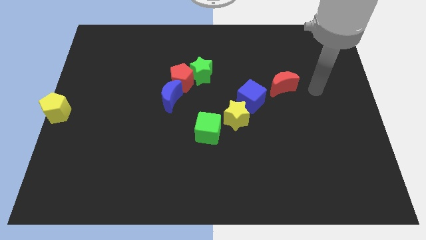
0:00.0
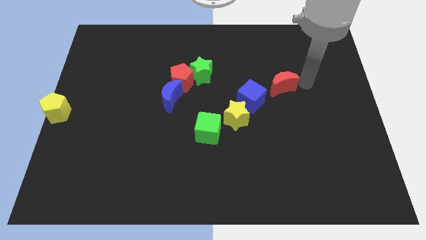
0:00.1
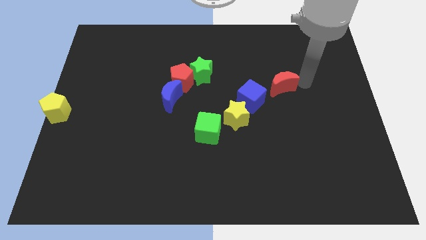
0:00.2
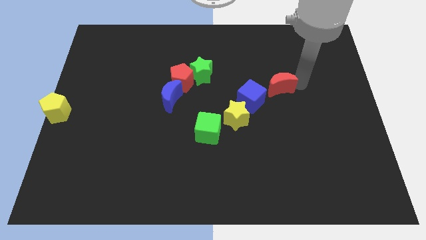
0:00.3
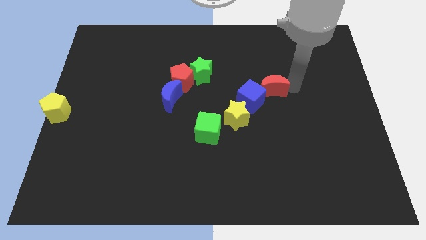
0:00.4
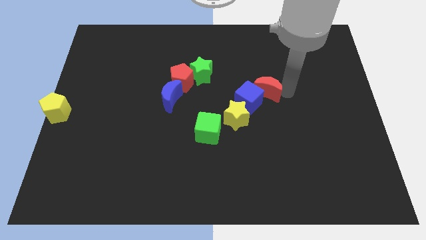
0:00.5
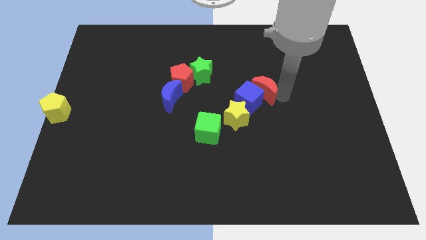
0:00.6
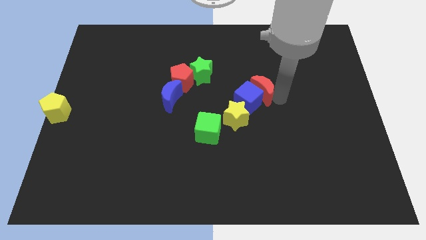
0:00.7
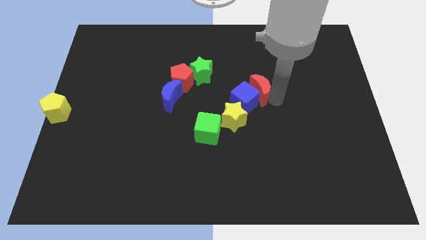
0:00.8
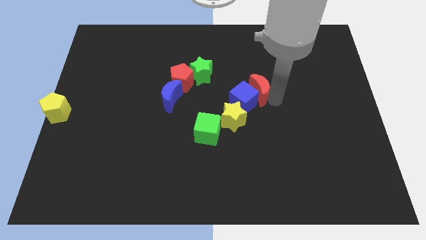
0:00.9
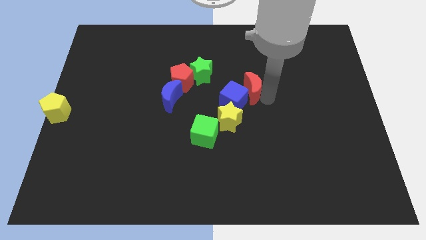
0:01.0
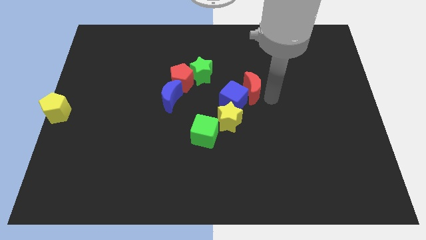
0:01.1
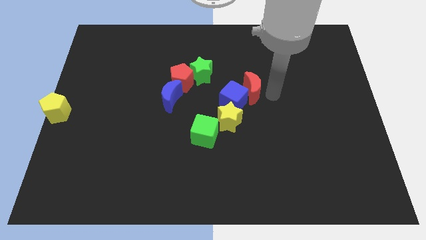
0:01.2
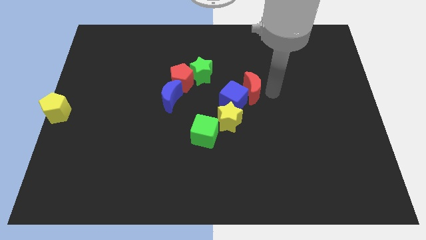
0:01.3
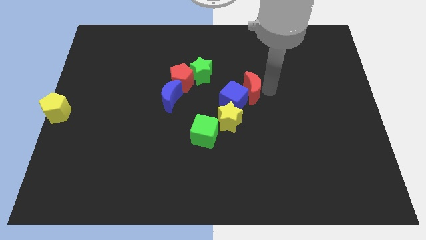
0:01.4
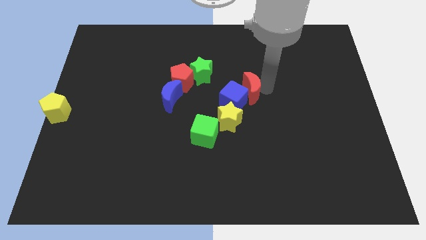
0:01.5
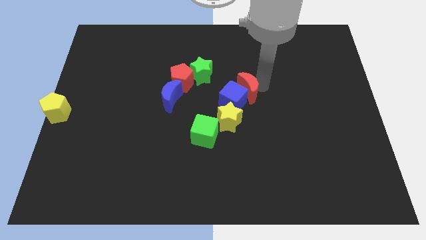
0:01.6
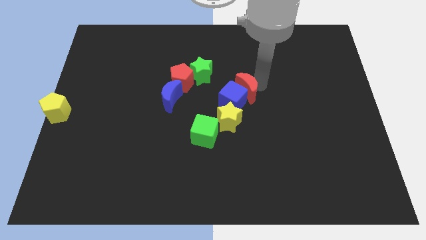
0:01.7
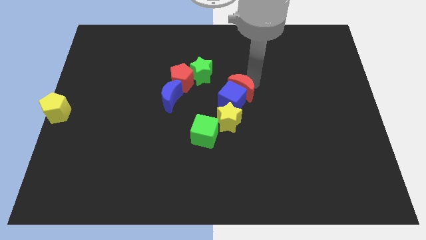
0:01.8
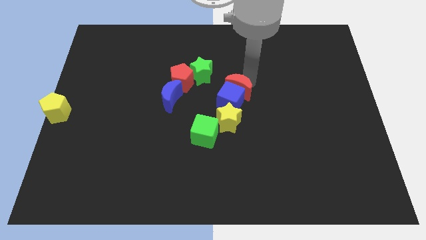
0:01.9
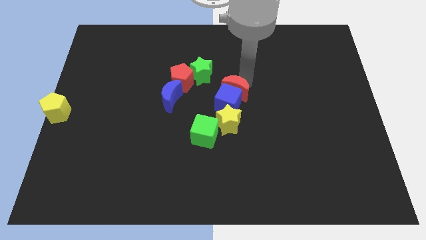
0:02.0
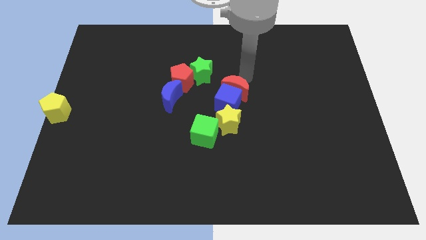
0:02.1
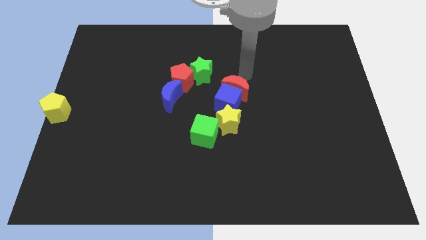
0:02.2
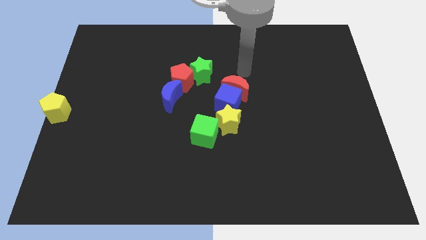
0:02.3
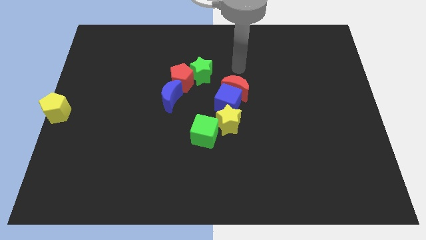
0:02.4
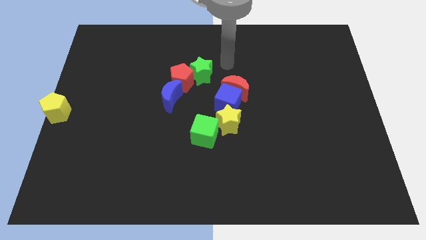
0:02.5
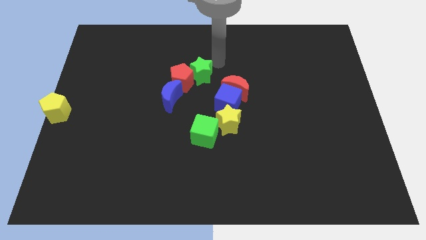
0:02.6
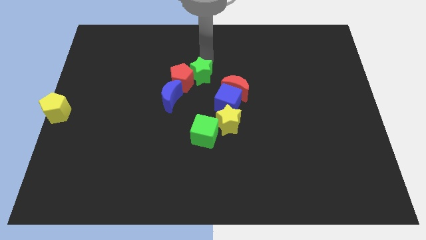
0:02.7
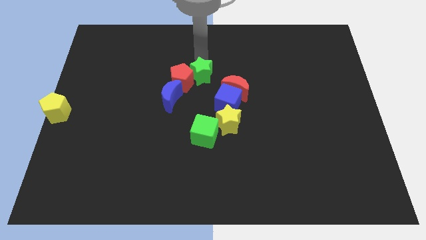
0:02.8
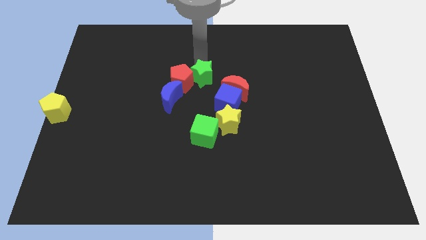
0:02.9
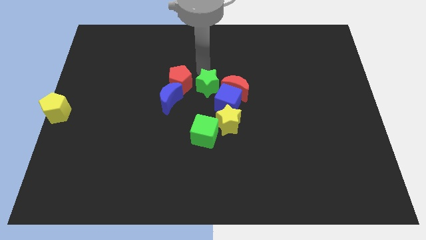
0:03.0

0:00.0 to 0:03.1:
move the red moon close to blue moon

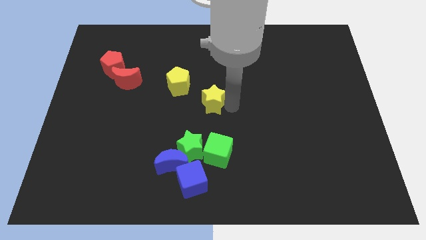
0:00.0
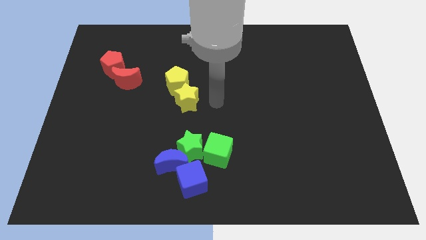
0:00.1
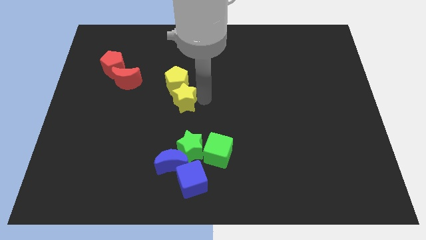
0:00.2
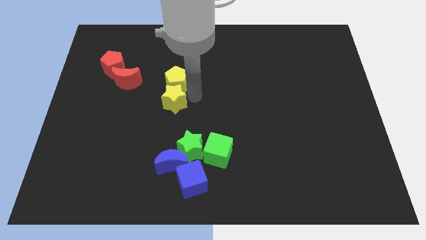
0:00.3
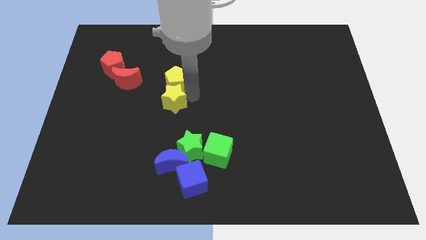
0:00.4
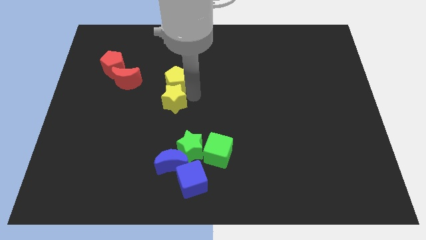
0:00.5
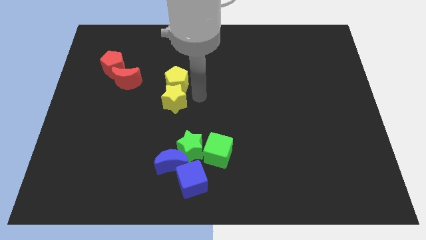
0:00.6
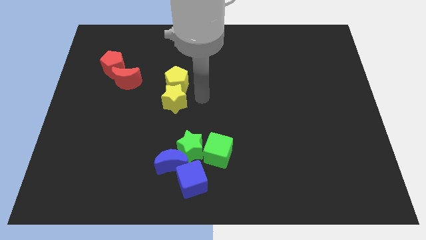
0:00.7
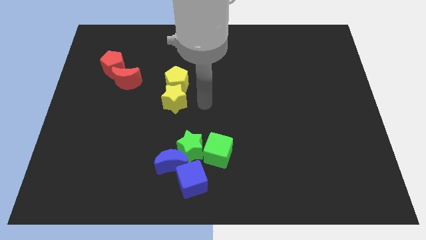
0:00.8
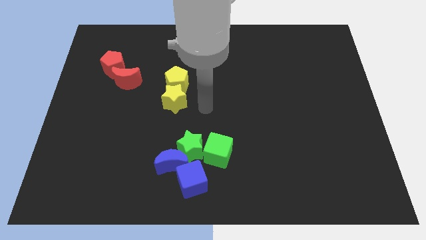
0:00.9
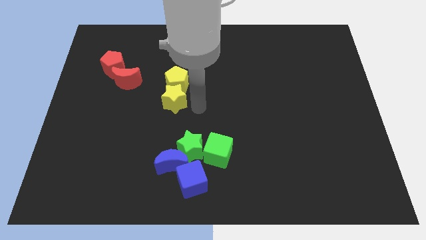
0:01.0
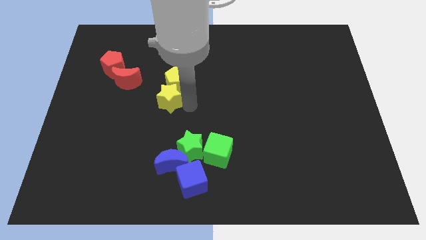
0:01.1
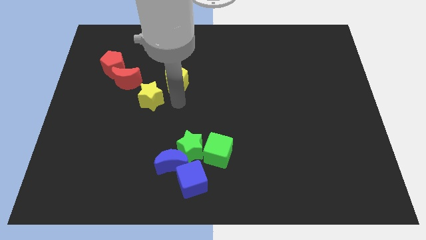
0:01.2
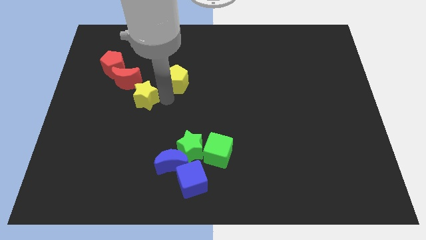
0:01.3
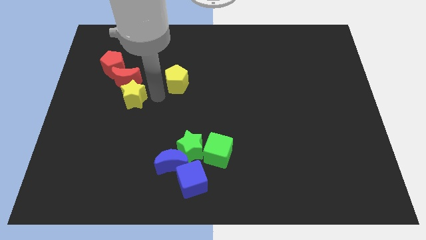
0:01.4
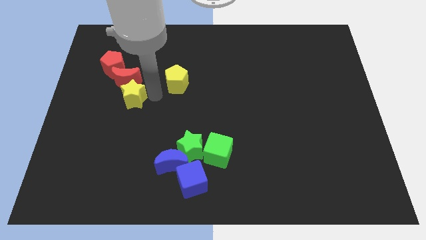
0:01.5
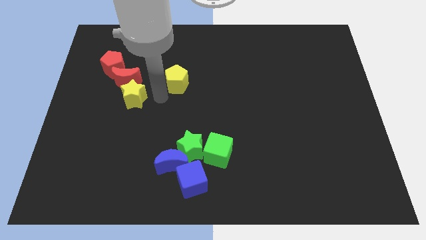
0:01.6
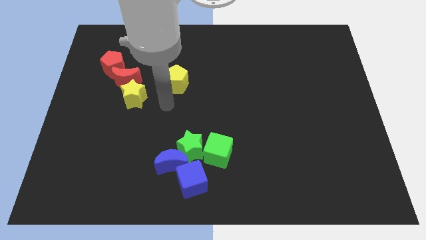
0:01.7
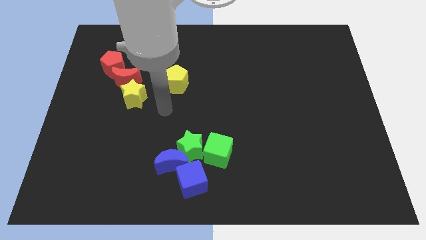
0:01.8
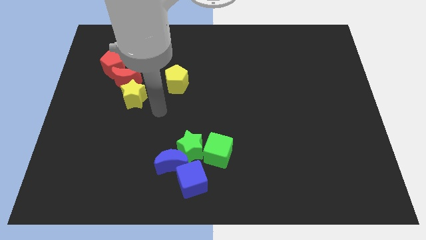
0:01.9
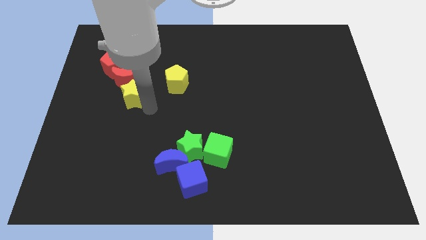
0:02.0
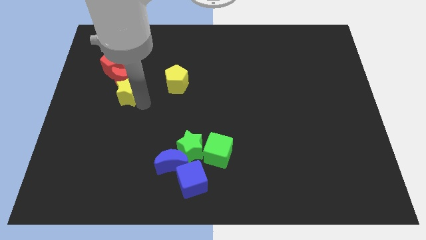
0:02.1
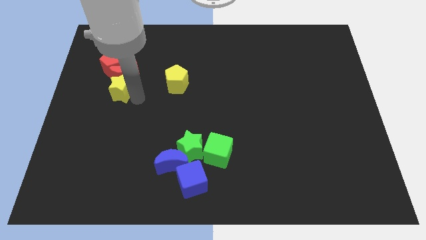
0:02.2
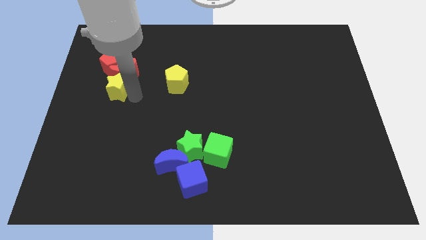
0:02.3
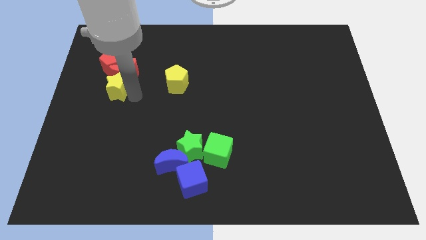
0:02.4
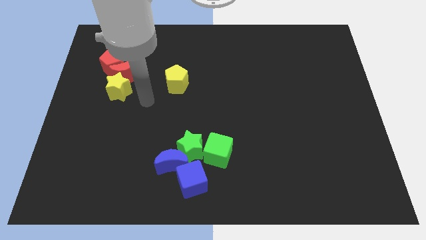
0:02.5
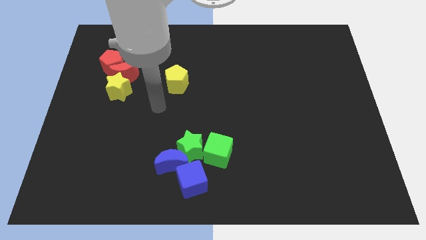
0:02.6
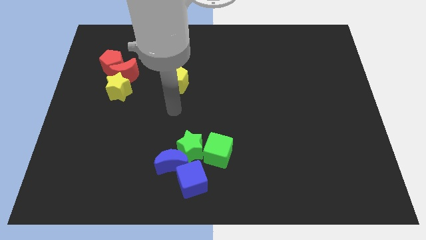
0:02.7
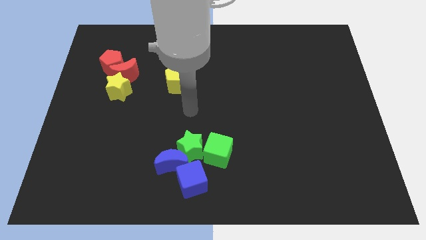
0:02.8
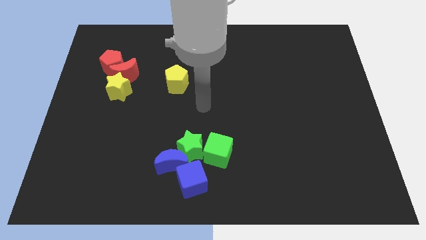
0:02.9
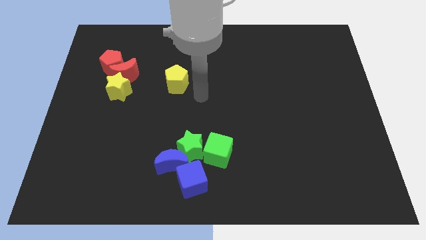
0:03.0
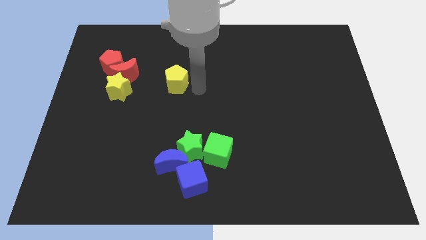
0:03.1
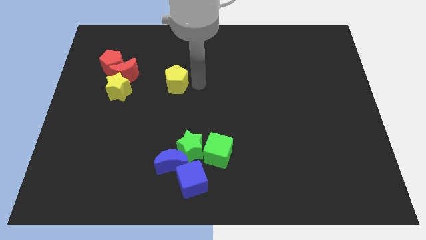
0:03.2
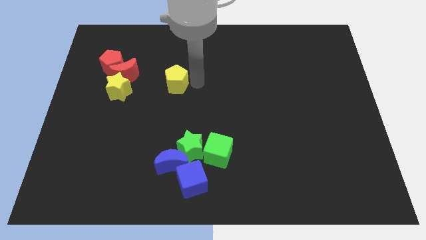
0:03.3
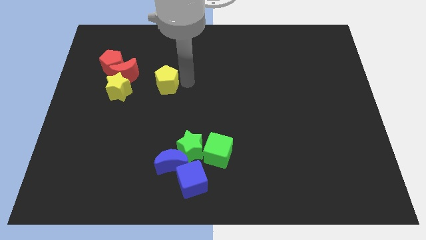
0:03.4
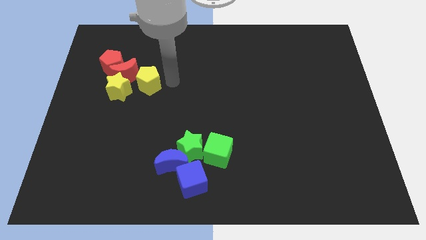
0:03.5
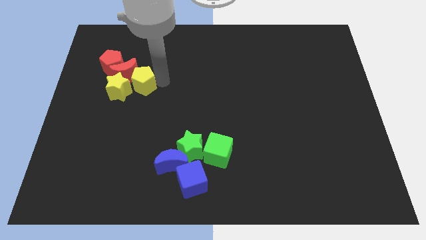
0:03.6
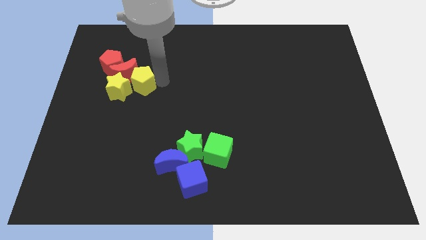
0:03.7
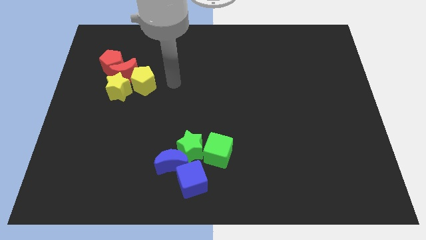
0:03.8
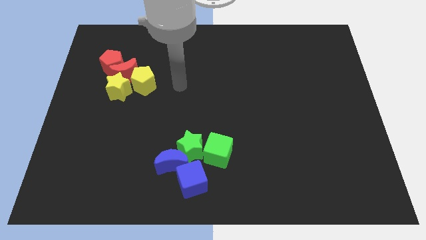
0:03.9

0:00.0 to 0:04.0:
push the yellow pentagon right to the yellow star

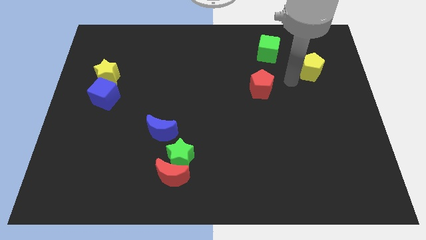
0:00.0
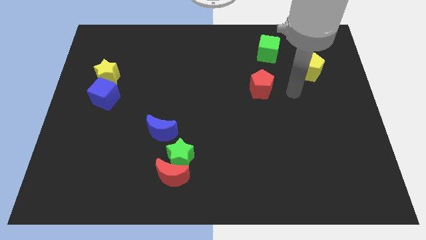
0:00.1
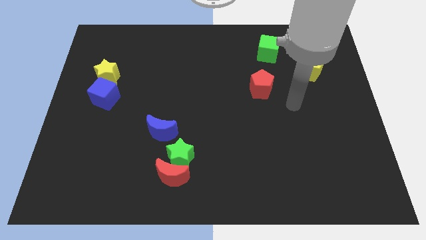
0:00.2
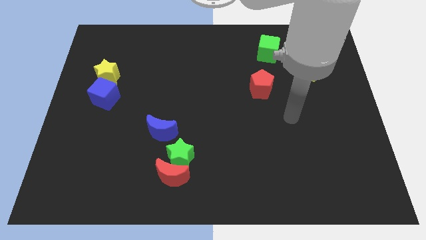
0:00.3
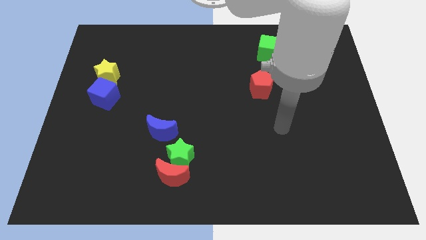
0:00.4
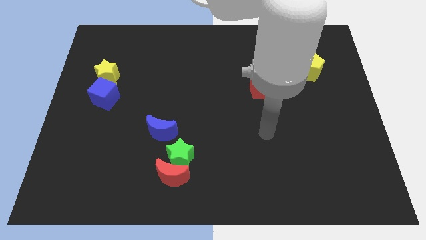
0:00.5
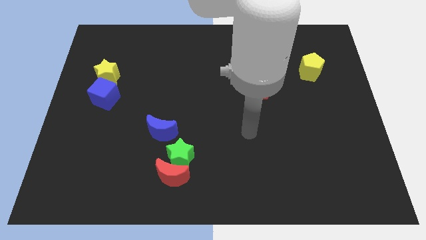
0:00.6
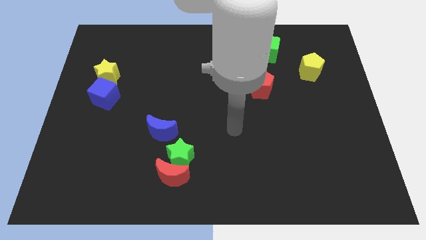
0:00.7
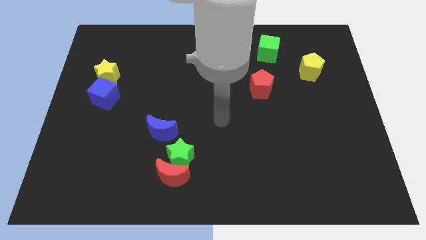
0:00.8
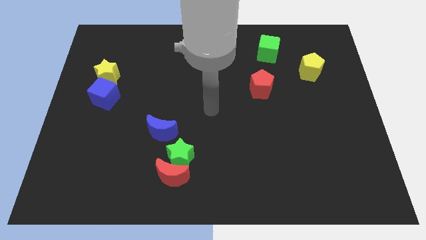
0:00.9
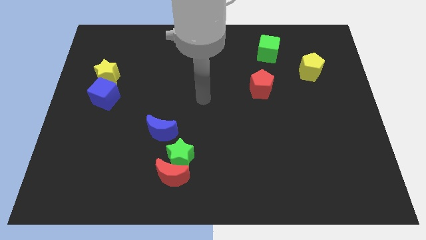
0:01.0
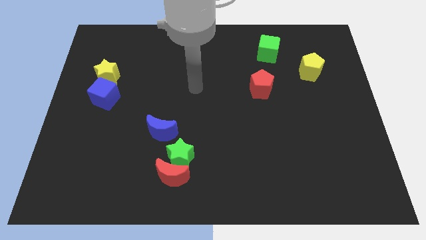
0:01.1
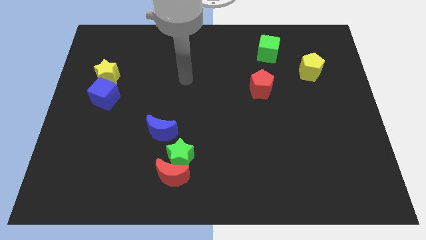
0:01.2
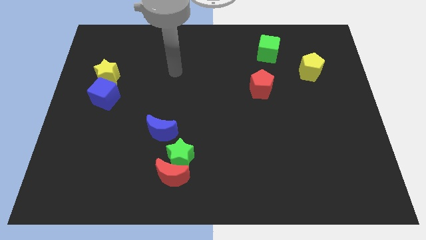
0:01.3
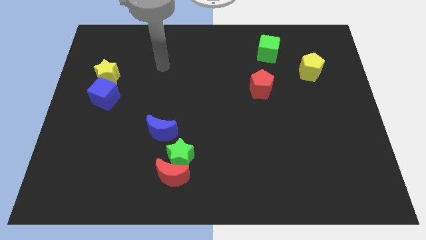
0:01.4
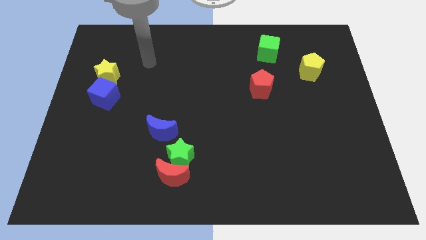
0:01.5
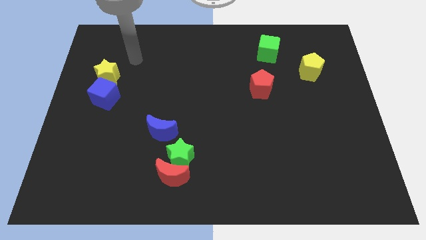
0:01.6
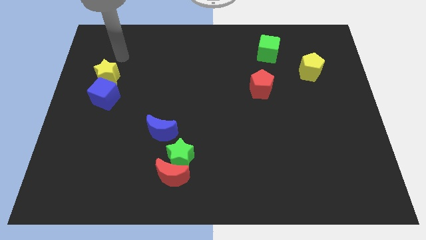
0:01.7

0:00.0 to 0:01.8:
move your arm away from the yellow pentagon

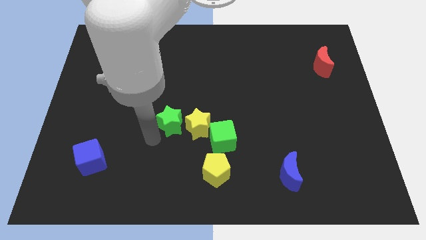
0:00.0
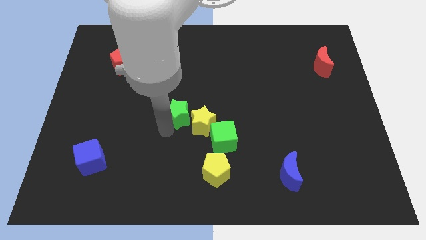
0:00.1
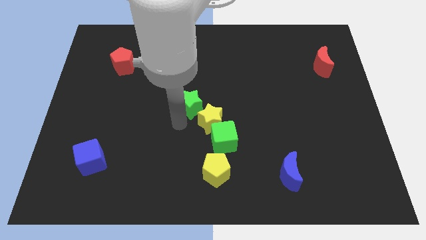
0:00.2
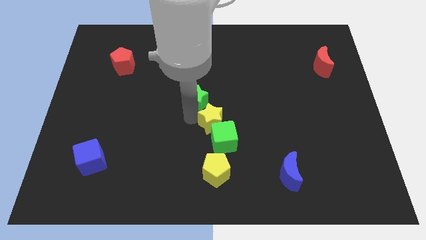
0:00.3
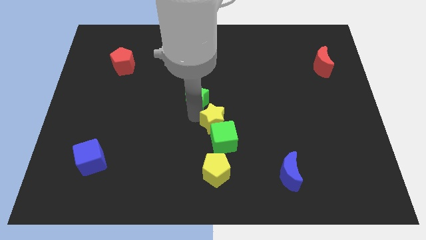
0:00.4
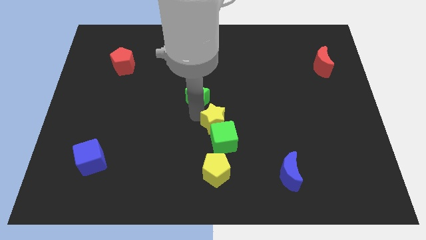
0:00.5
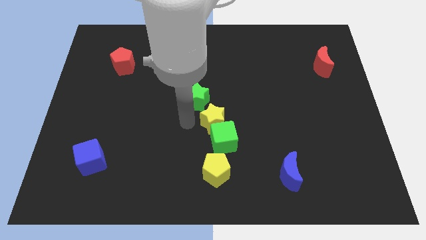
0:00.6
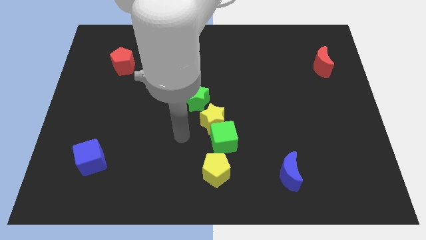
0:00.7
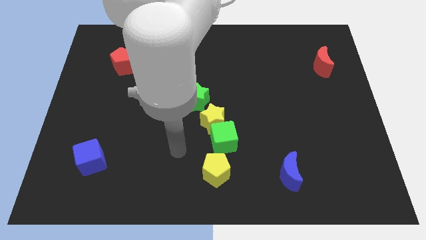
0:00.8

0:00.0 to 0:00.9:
move the green star to the centre of board
